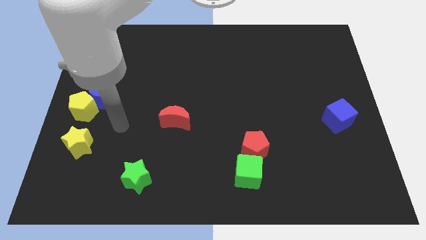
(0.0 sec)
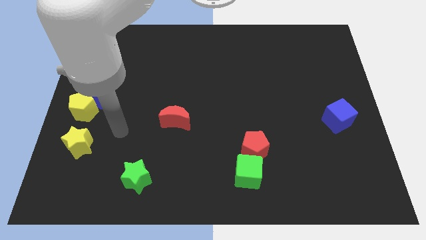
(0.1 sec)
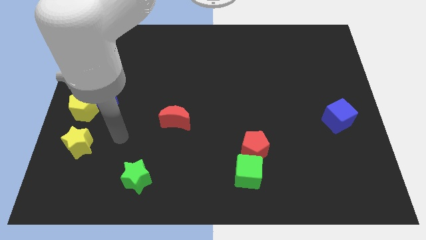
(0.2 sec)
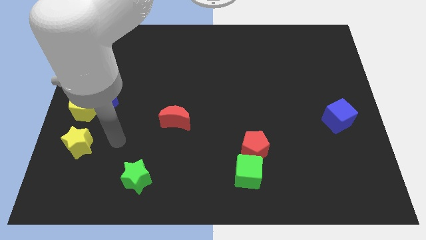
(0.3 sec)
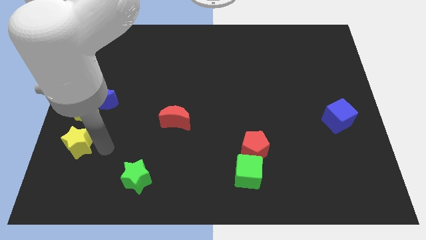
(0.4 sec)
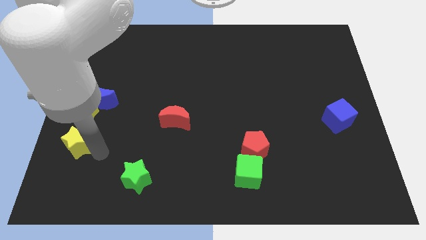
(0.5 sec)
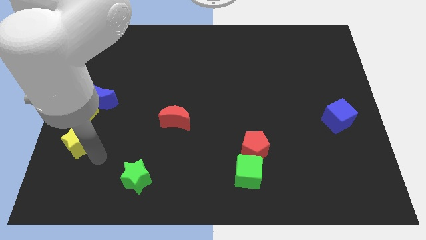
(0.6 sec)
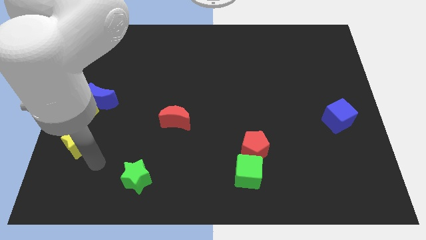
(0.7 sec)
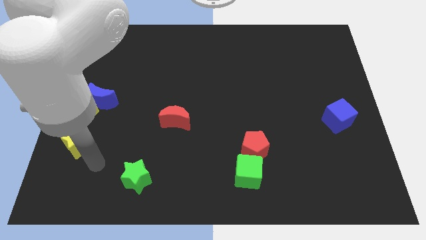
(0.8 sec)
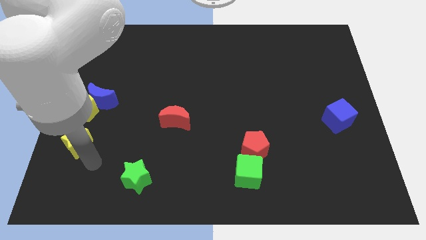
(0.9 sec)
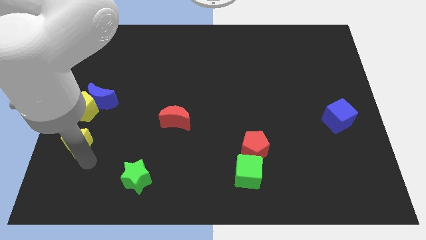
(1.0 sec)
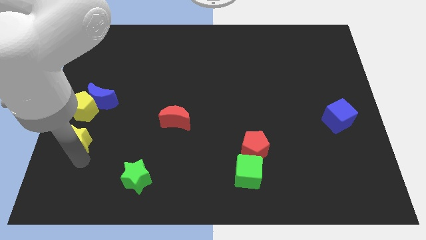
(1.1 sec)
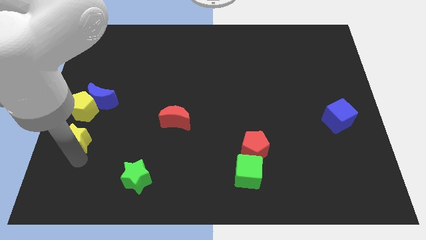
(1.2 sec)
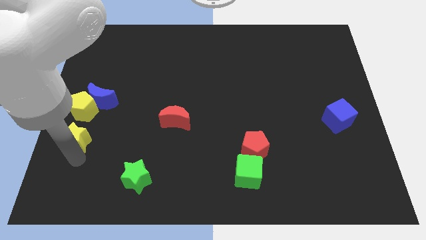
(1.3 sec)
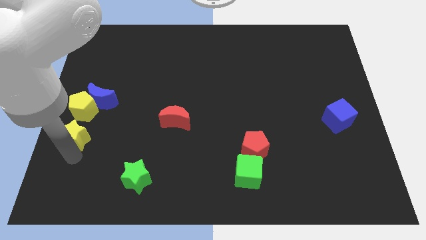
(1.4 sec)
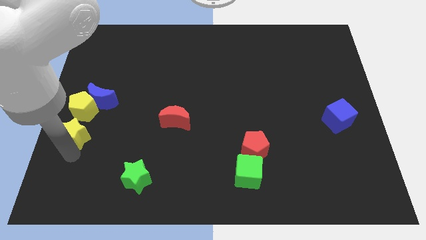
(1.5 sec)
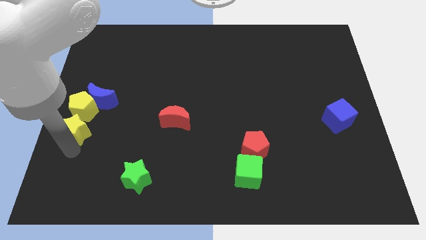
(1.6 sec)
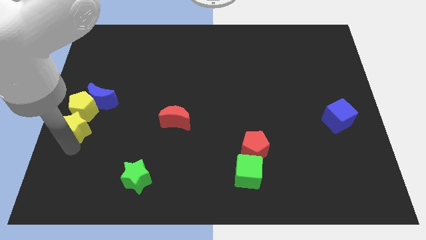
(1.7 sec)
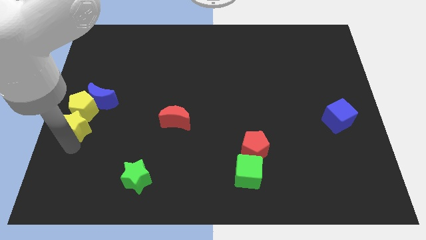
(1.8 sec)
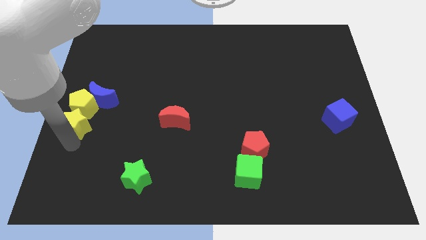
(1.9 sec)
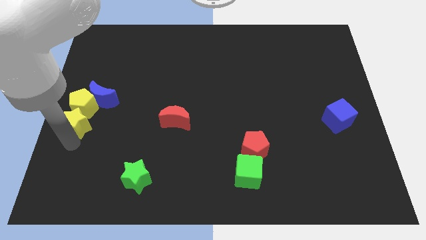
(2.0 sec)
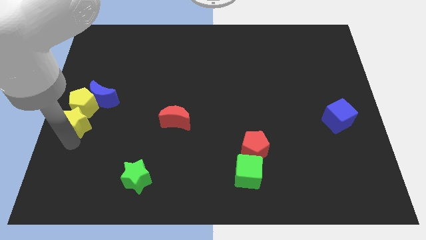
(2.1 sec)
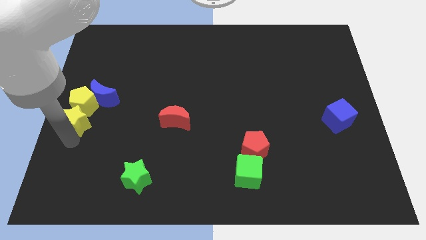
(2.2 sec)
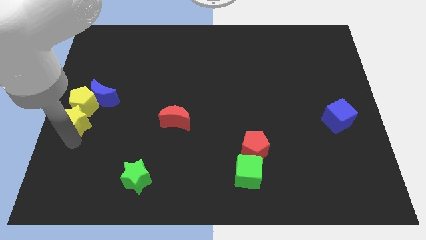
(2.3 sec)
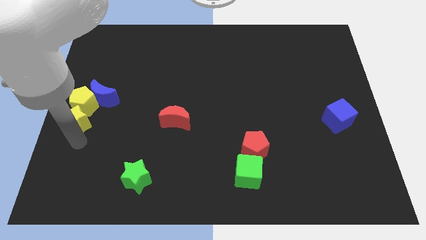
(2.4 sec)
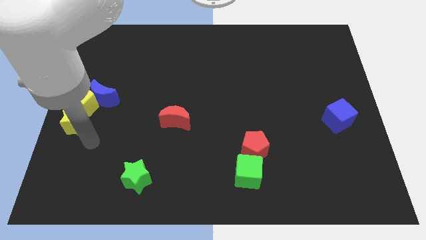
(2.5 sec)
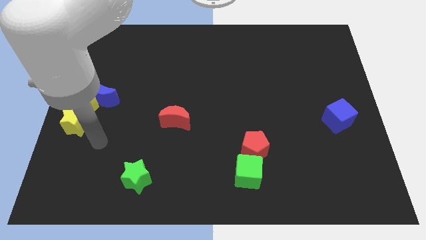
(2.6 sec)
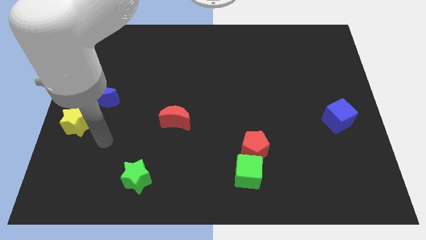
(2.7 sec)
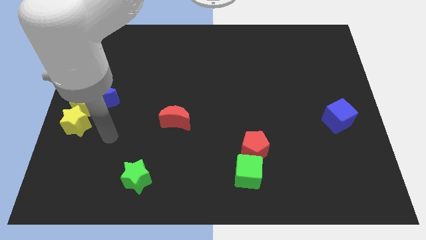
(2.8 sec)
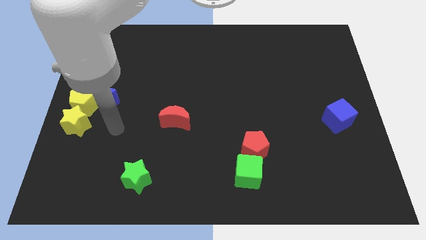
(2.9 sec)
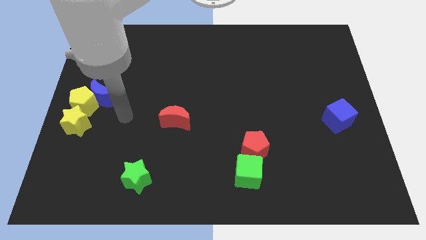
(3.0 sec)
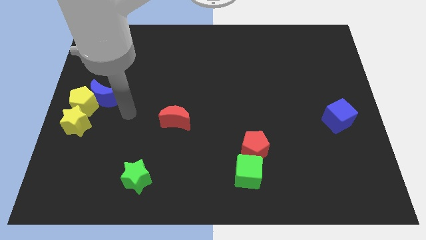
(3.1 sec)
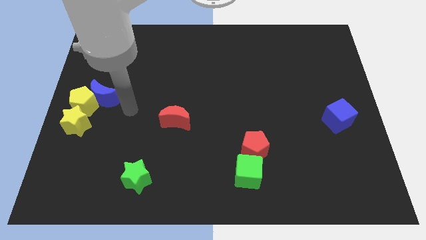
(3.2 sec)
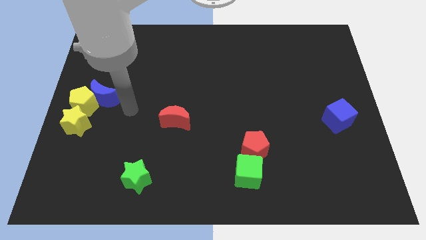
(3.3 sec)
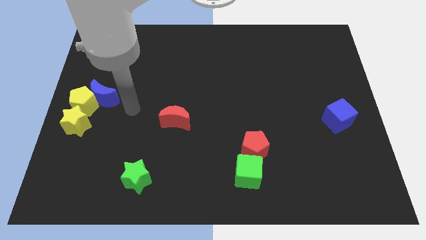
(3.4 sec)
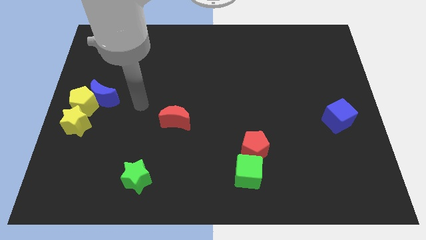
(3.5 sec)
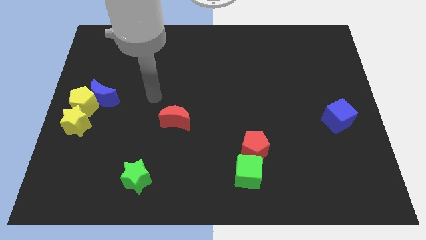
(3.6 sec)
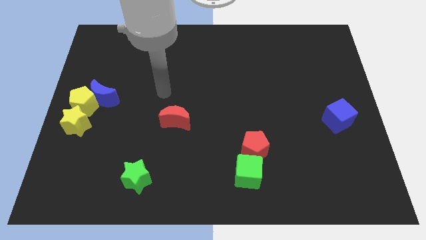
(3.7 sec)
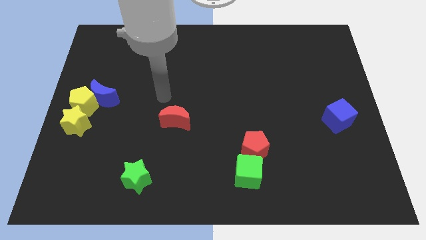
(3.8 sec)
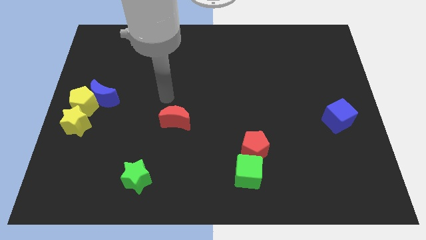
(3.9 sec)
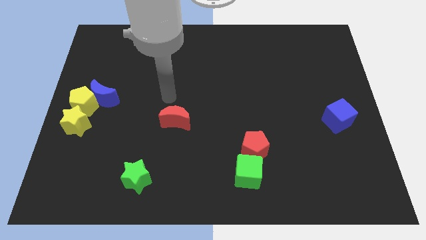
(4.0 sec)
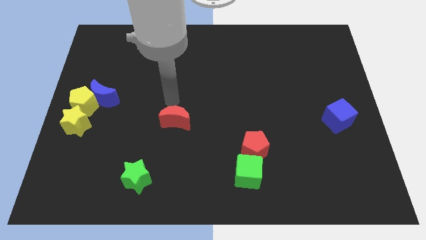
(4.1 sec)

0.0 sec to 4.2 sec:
push yellow star into the yellow pentagon

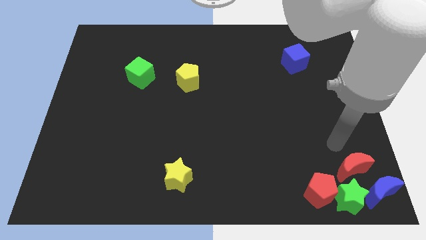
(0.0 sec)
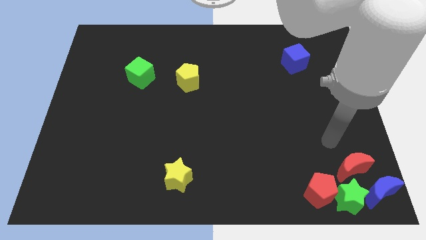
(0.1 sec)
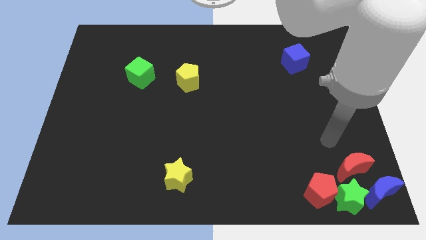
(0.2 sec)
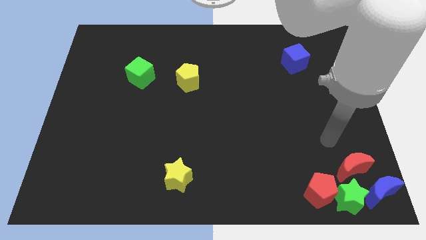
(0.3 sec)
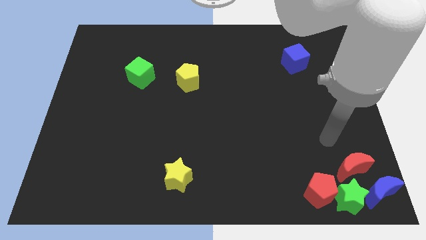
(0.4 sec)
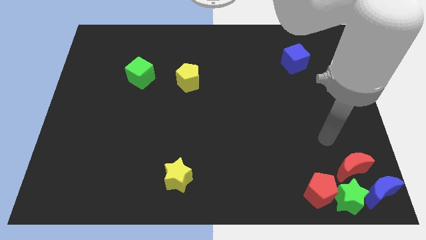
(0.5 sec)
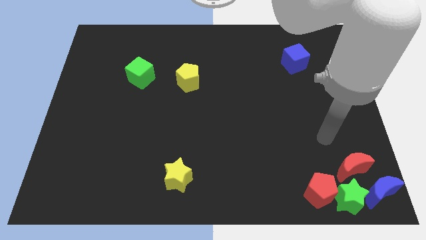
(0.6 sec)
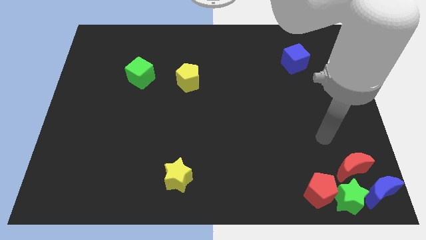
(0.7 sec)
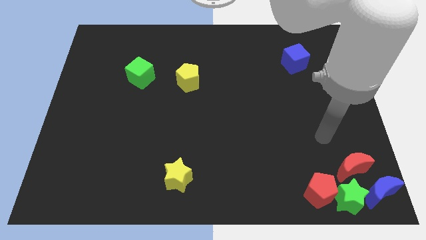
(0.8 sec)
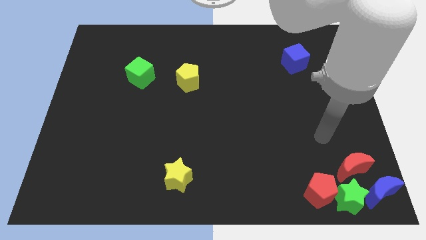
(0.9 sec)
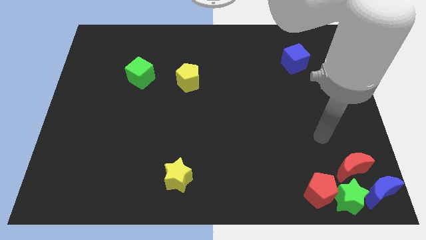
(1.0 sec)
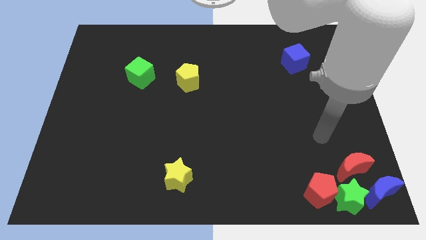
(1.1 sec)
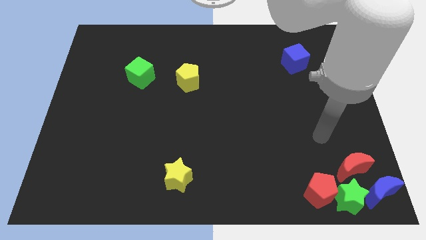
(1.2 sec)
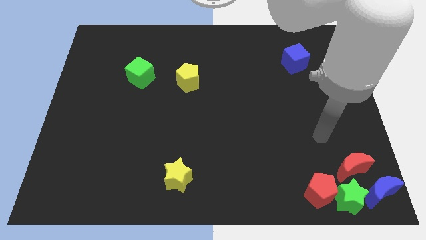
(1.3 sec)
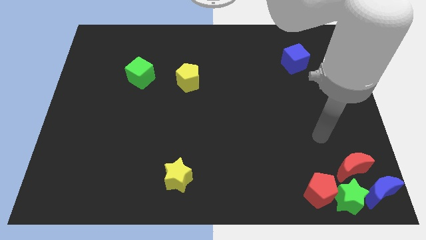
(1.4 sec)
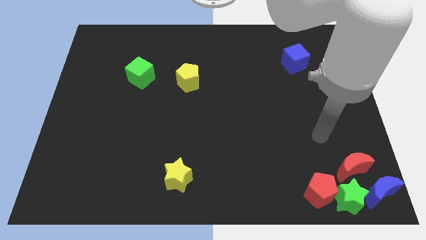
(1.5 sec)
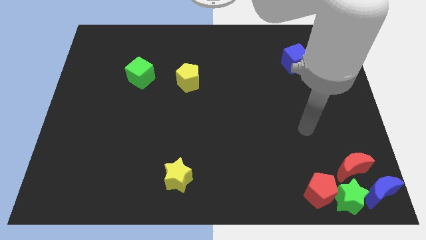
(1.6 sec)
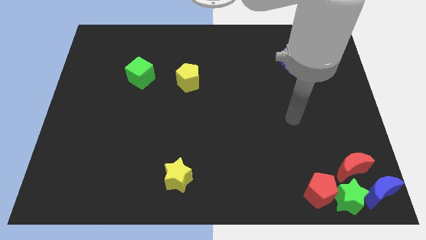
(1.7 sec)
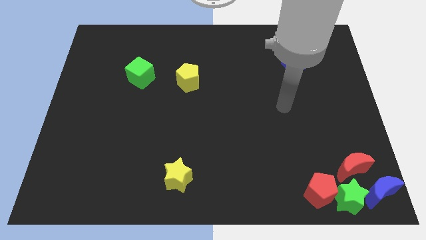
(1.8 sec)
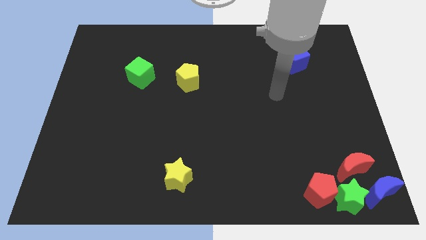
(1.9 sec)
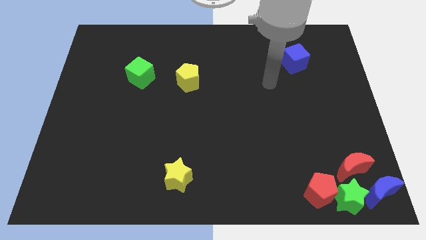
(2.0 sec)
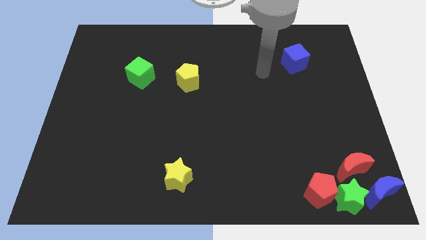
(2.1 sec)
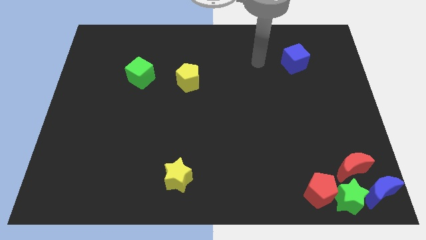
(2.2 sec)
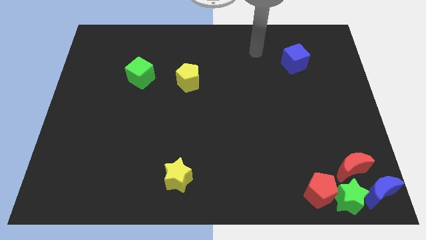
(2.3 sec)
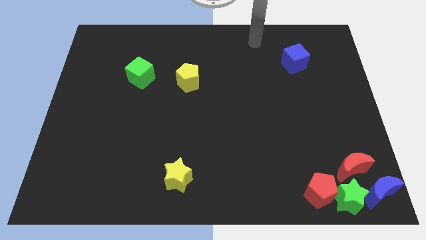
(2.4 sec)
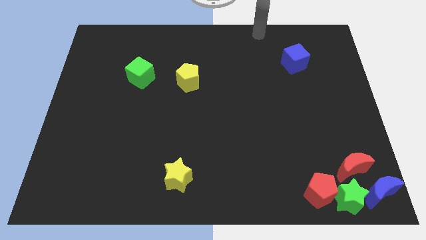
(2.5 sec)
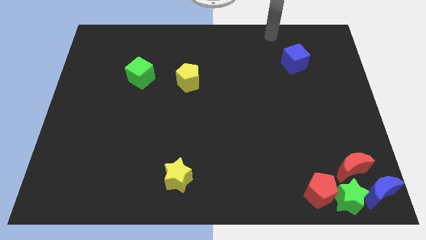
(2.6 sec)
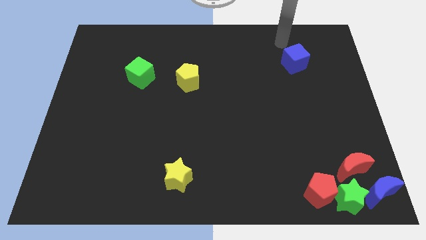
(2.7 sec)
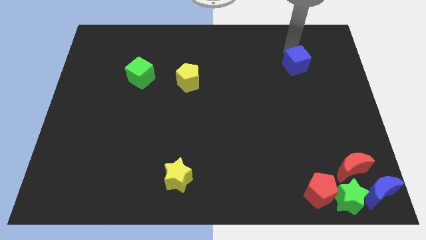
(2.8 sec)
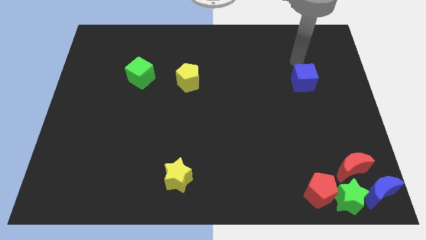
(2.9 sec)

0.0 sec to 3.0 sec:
place the blue cube horizontally to the right side of the yellow pentagon

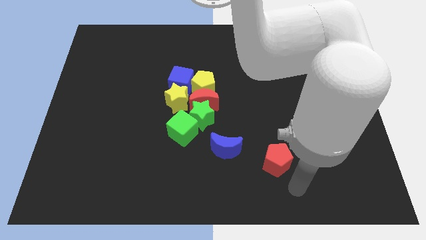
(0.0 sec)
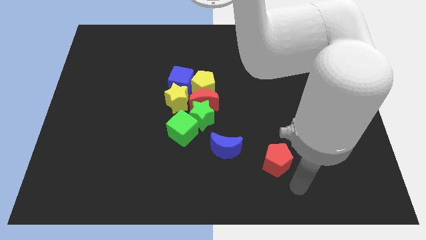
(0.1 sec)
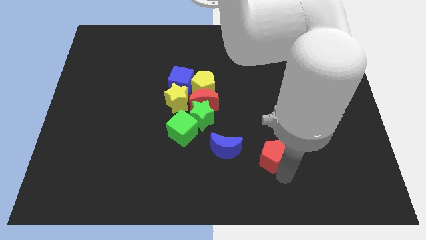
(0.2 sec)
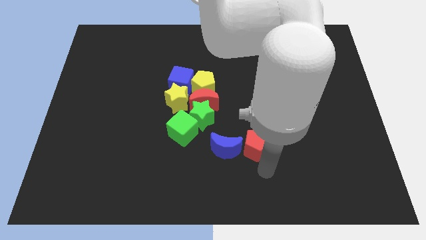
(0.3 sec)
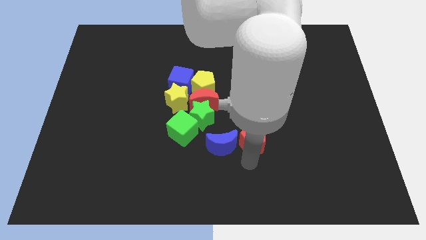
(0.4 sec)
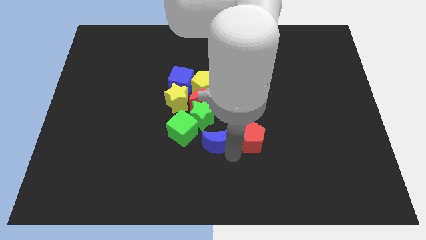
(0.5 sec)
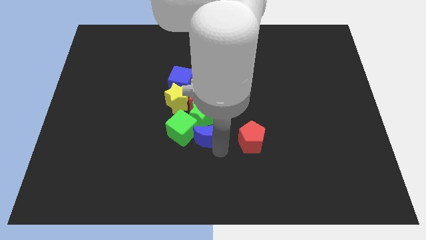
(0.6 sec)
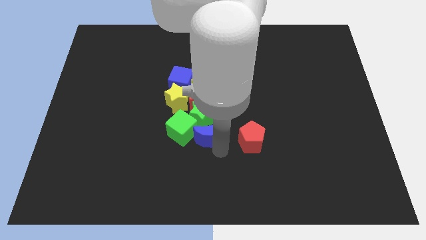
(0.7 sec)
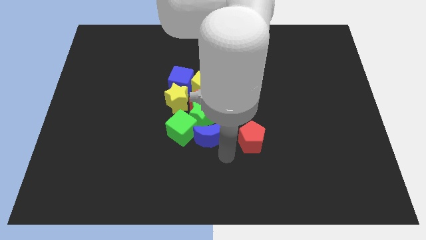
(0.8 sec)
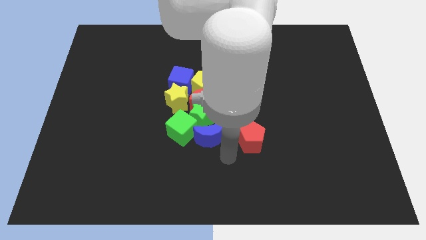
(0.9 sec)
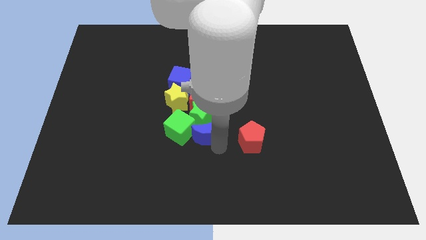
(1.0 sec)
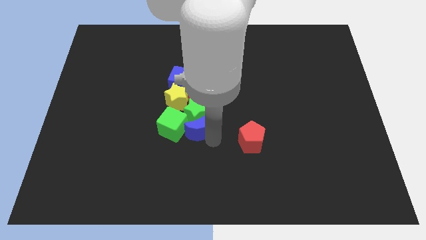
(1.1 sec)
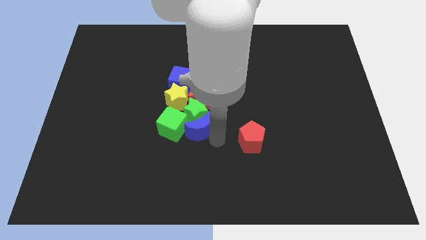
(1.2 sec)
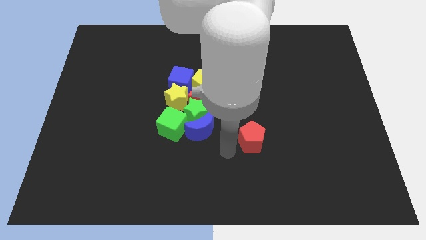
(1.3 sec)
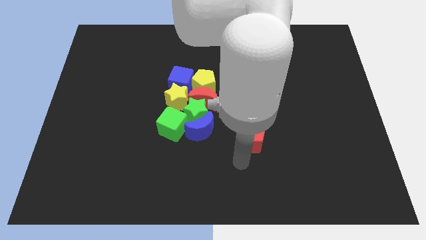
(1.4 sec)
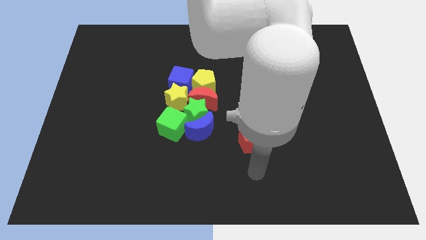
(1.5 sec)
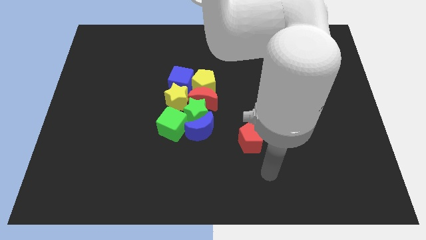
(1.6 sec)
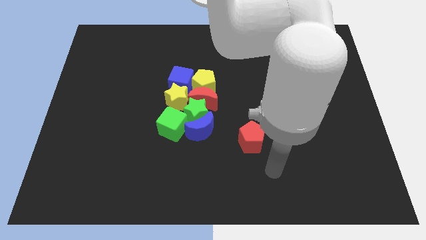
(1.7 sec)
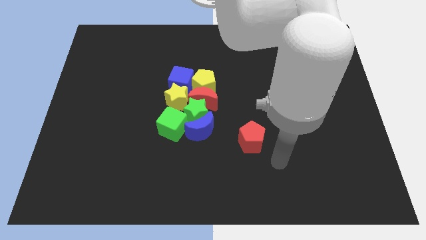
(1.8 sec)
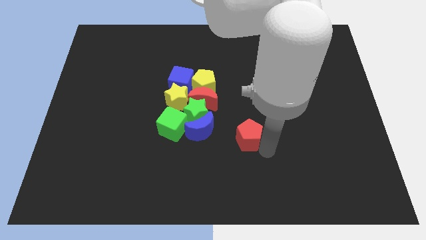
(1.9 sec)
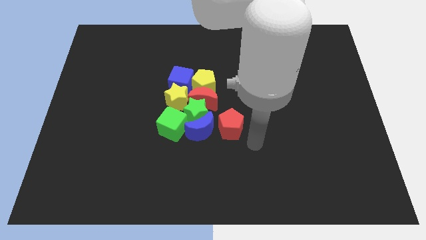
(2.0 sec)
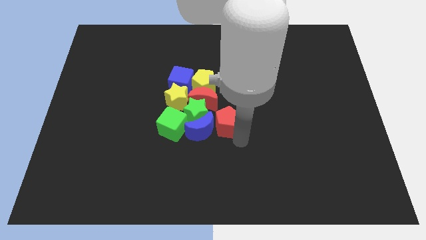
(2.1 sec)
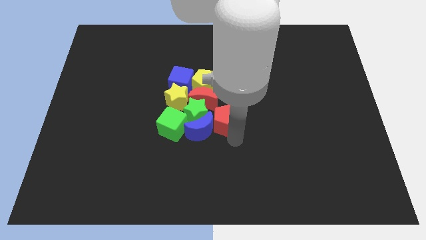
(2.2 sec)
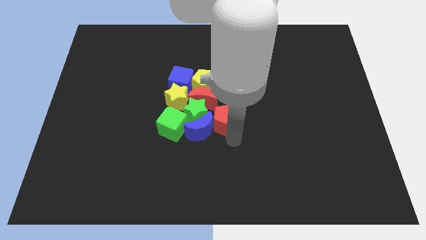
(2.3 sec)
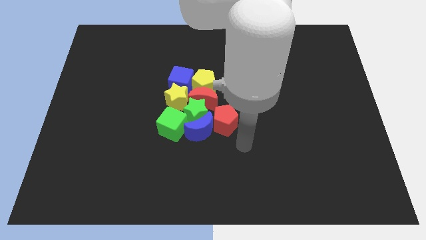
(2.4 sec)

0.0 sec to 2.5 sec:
move the blue crescent and red pentagon into the group of blocks
